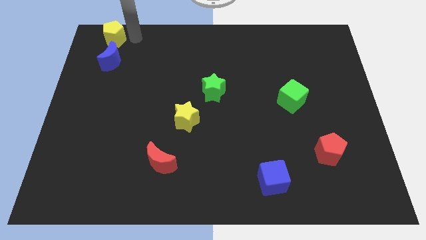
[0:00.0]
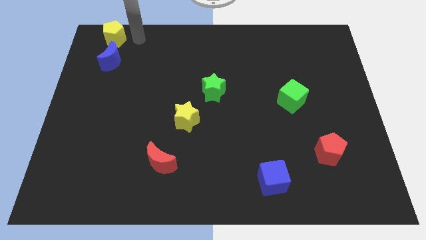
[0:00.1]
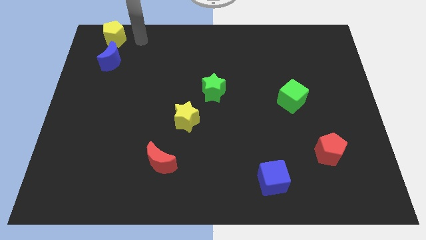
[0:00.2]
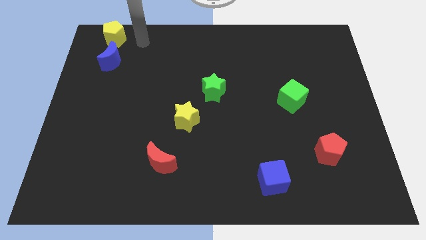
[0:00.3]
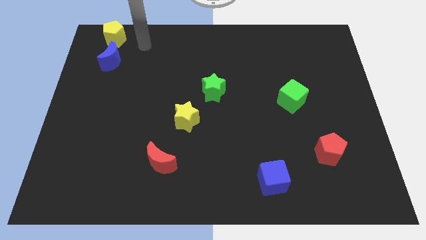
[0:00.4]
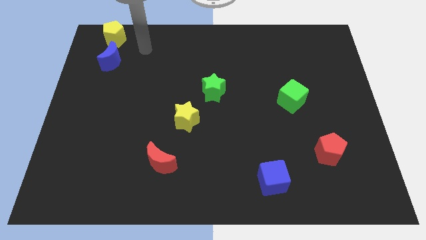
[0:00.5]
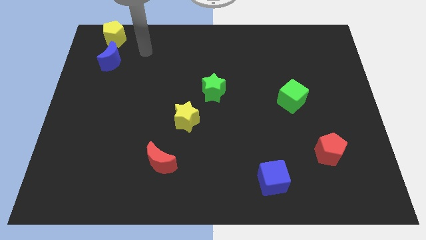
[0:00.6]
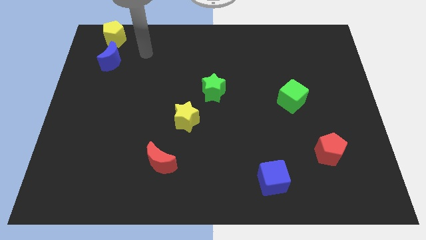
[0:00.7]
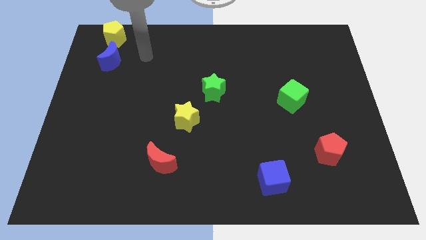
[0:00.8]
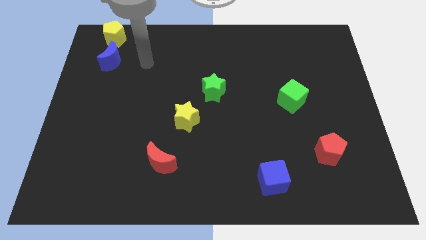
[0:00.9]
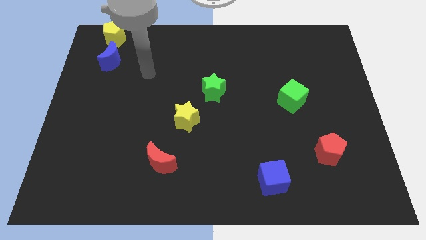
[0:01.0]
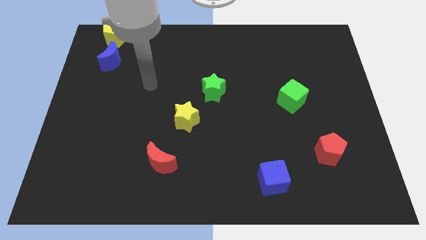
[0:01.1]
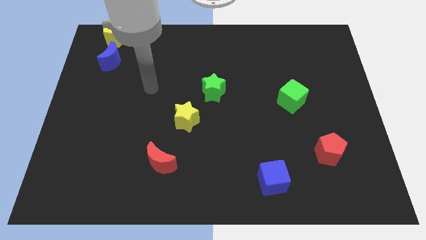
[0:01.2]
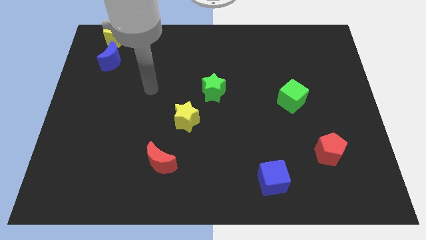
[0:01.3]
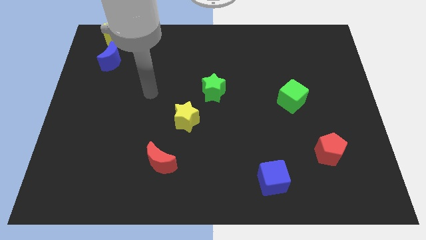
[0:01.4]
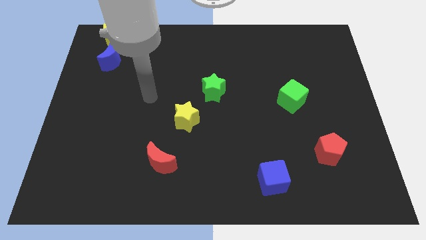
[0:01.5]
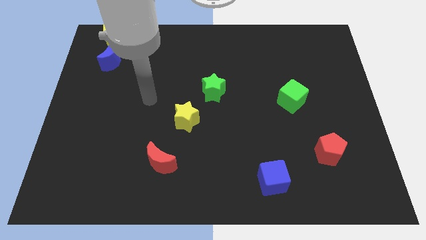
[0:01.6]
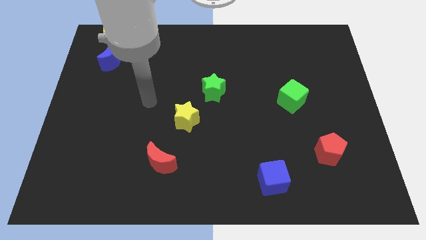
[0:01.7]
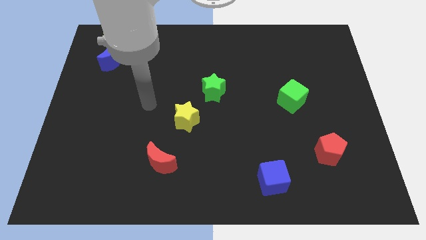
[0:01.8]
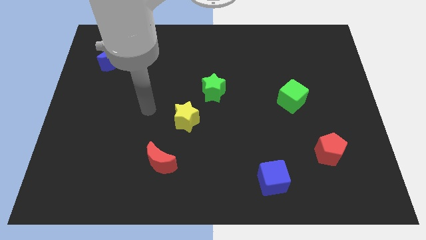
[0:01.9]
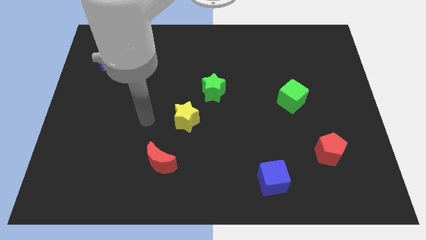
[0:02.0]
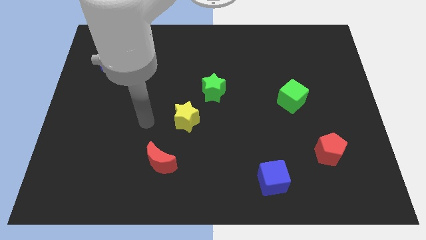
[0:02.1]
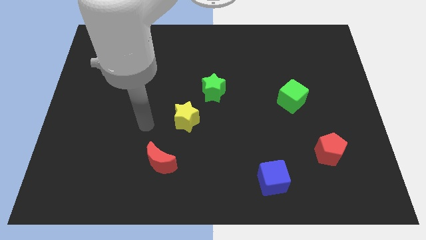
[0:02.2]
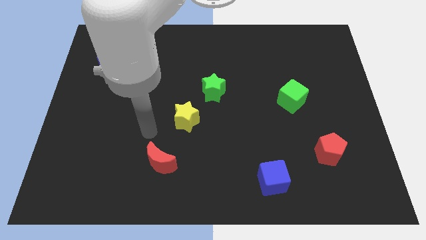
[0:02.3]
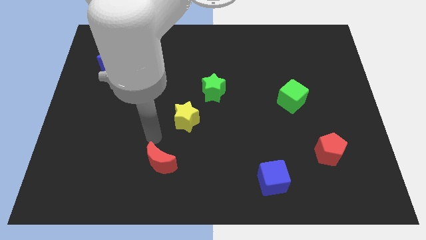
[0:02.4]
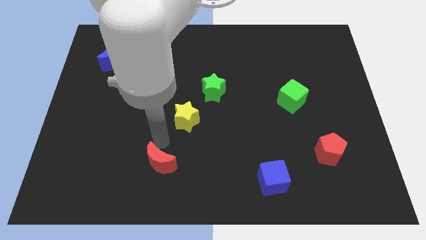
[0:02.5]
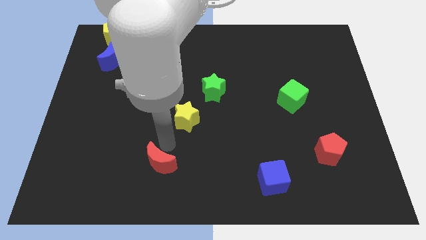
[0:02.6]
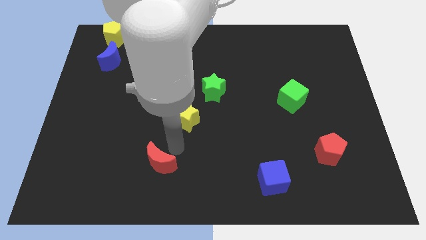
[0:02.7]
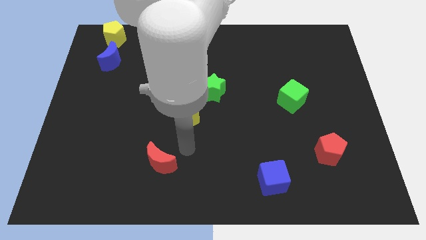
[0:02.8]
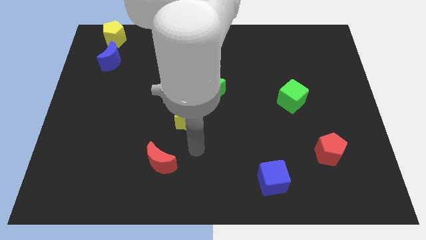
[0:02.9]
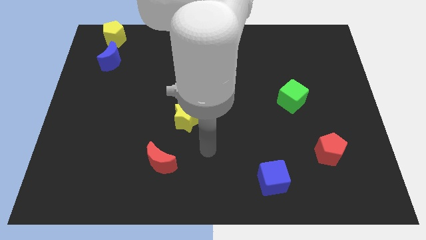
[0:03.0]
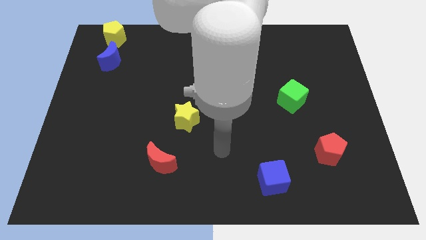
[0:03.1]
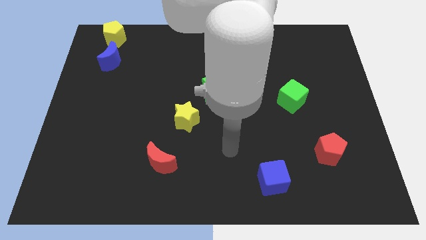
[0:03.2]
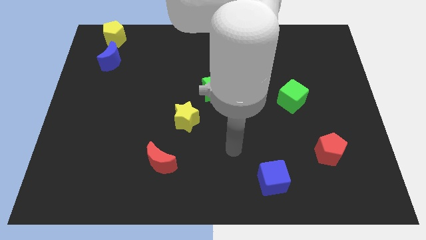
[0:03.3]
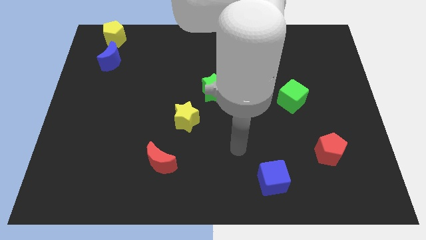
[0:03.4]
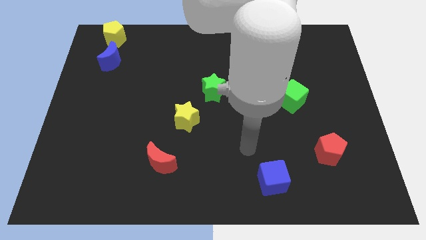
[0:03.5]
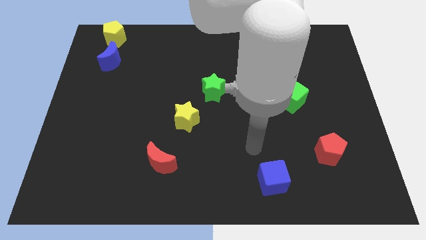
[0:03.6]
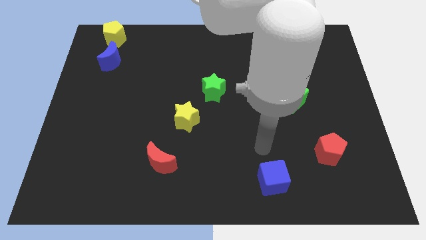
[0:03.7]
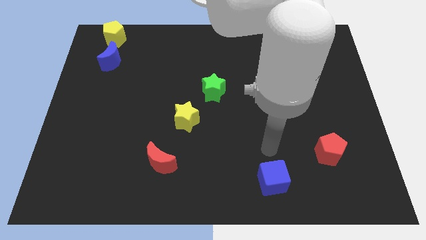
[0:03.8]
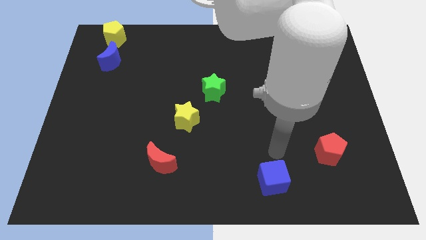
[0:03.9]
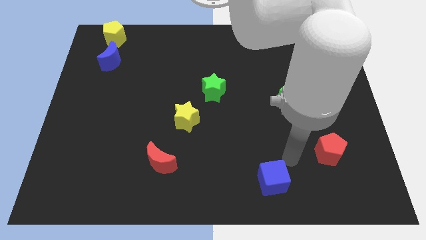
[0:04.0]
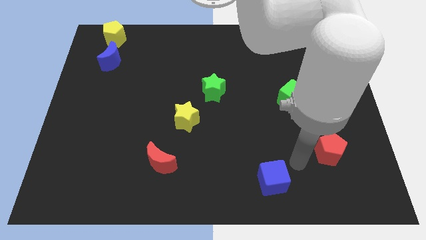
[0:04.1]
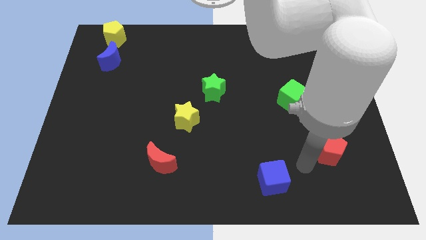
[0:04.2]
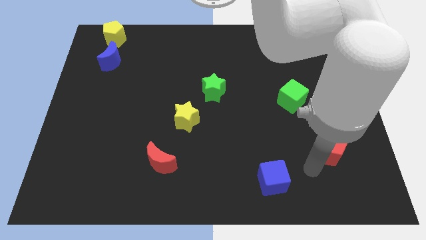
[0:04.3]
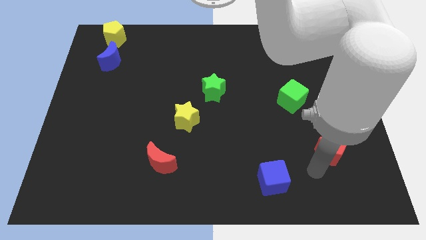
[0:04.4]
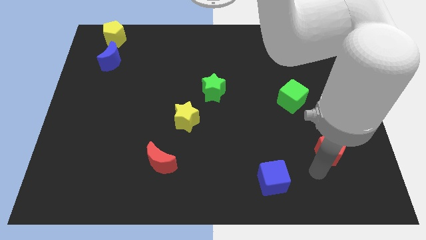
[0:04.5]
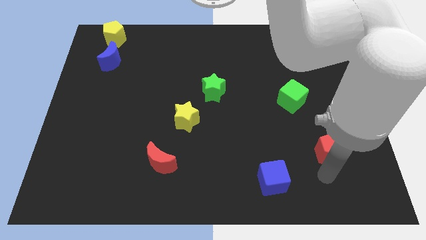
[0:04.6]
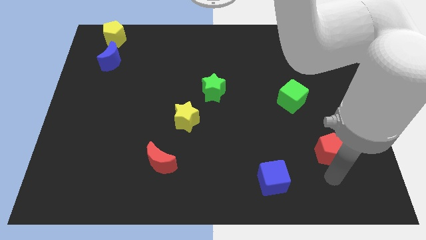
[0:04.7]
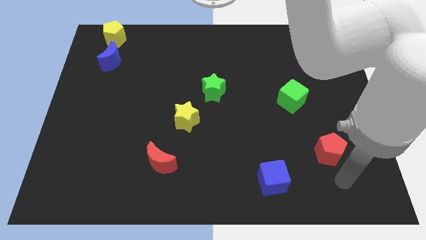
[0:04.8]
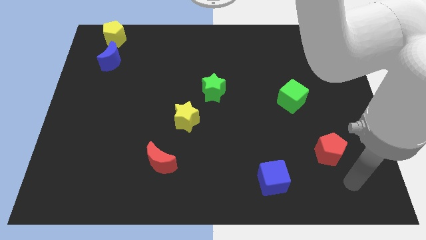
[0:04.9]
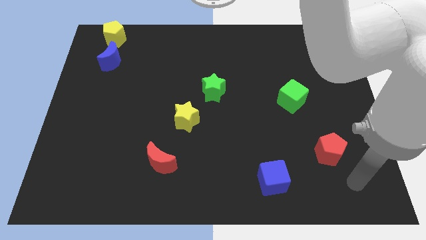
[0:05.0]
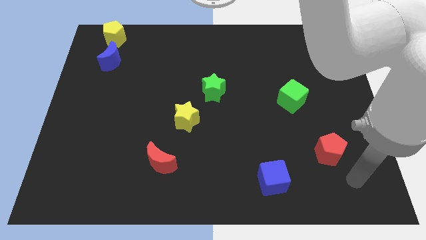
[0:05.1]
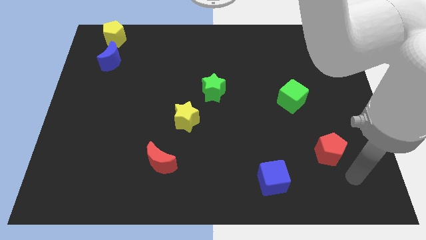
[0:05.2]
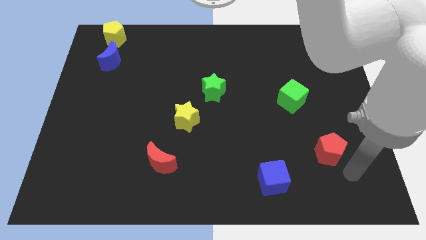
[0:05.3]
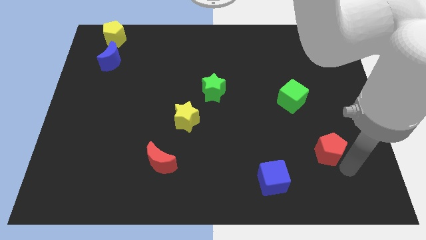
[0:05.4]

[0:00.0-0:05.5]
move your arm towards the bottom right to the red pentagon

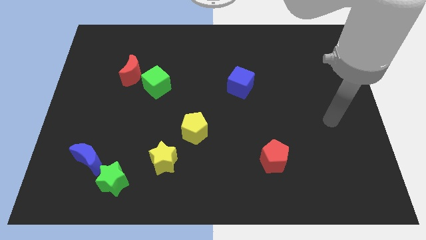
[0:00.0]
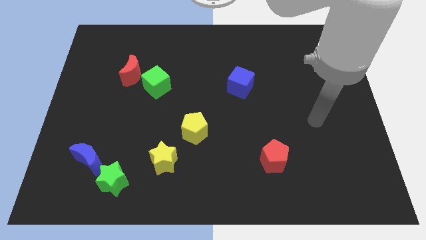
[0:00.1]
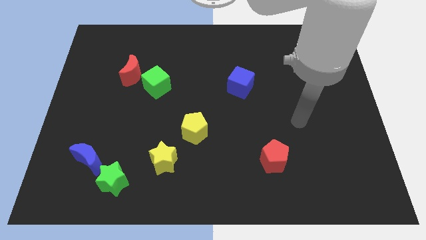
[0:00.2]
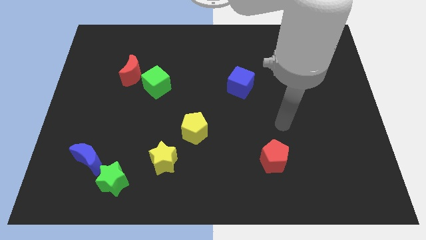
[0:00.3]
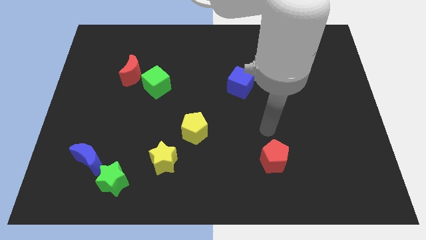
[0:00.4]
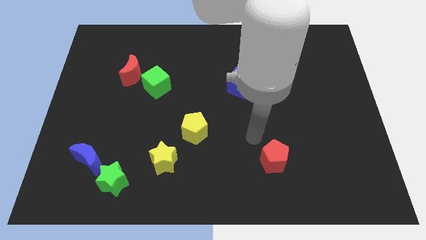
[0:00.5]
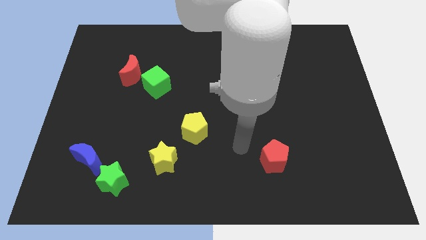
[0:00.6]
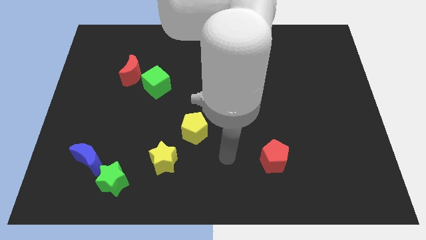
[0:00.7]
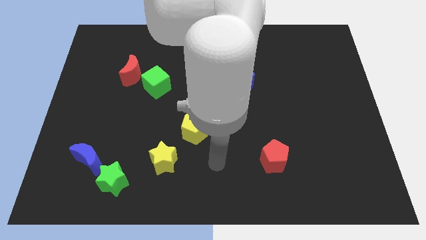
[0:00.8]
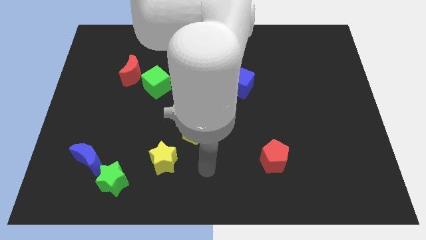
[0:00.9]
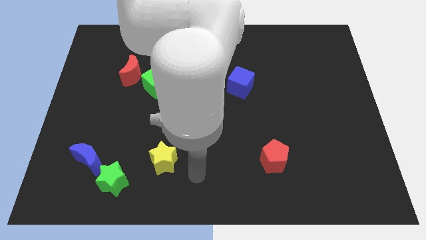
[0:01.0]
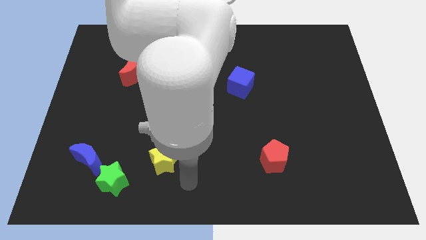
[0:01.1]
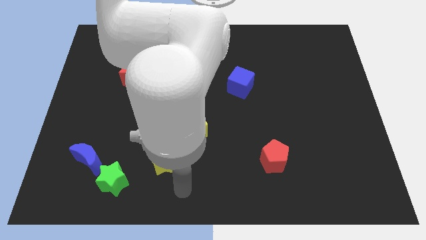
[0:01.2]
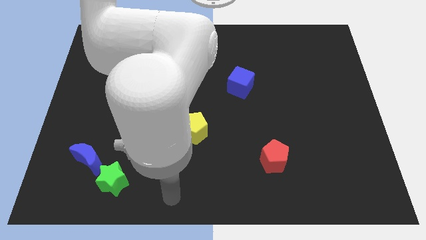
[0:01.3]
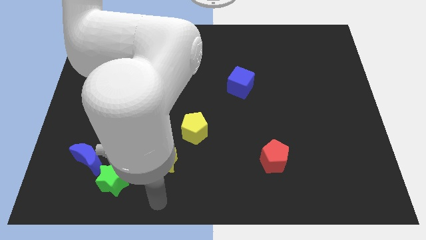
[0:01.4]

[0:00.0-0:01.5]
move your hand to the bottom side of the yellow star

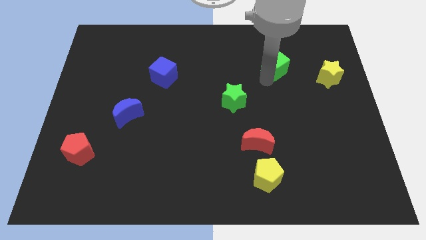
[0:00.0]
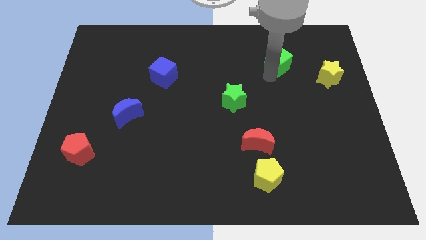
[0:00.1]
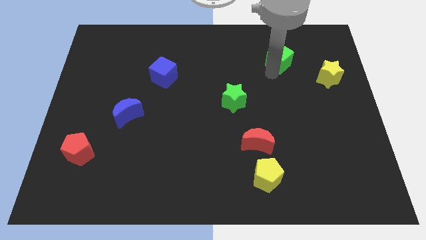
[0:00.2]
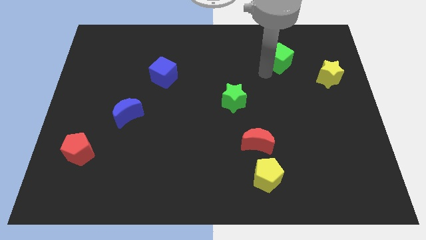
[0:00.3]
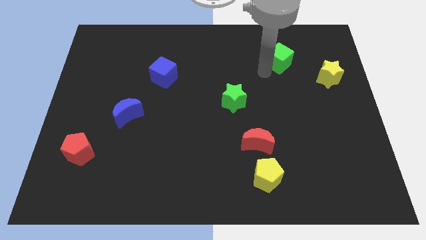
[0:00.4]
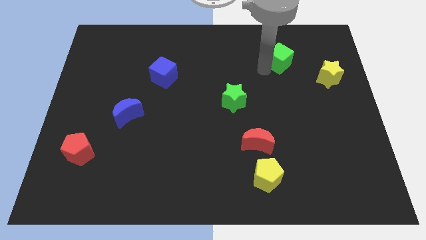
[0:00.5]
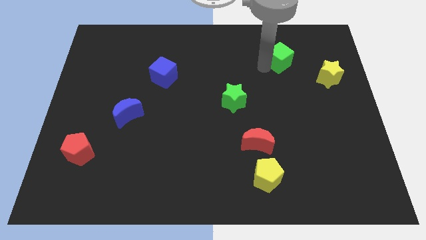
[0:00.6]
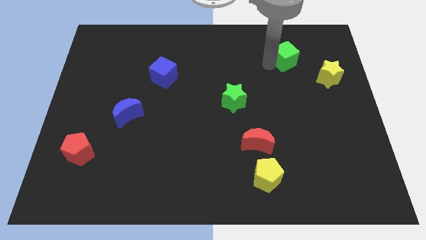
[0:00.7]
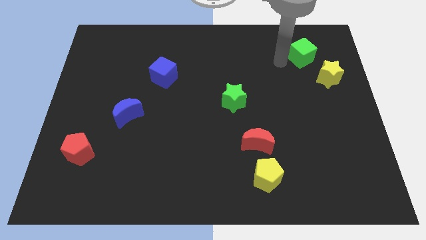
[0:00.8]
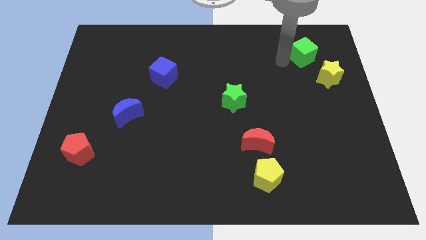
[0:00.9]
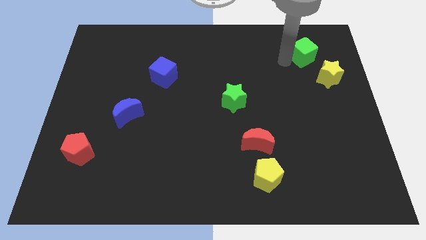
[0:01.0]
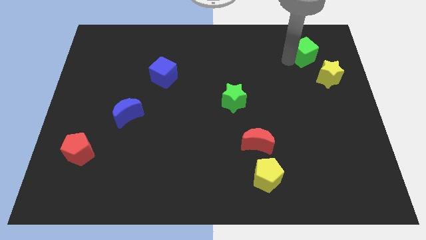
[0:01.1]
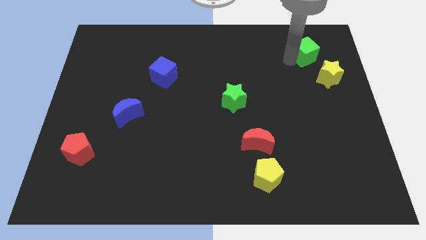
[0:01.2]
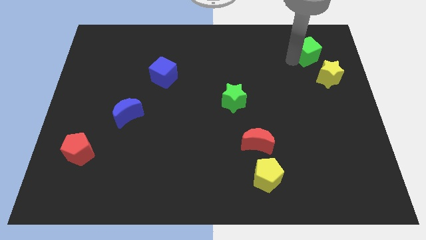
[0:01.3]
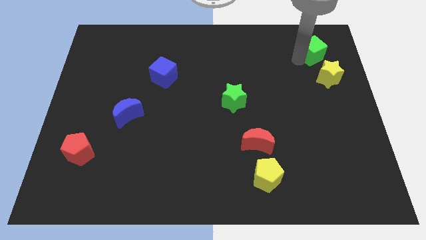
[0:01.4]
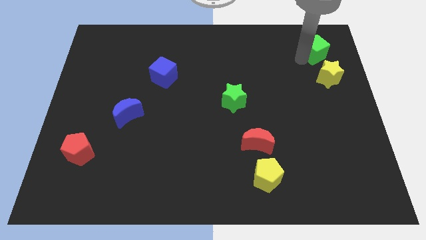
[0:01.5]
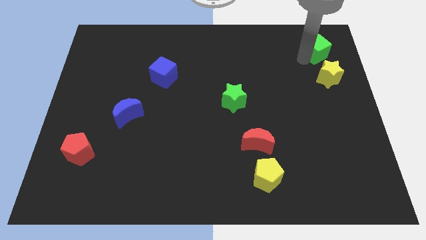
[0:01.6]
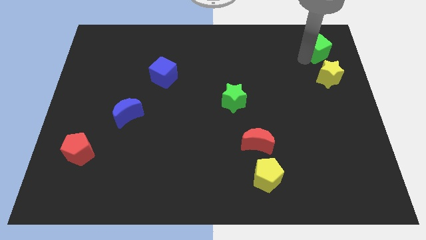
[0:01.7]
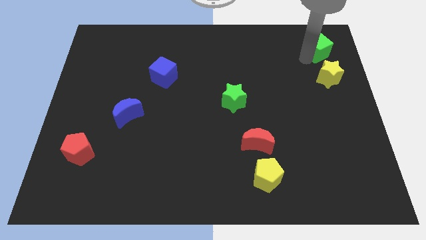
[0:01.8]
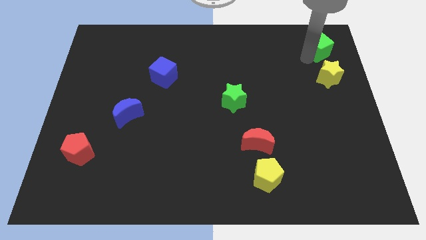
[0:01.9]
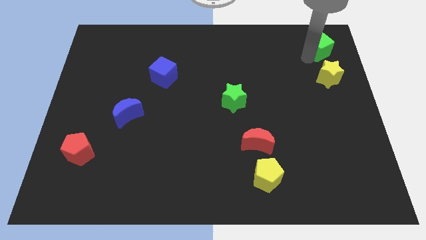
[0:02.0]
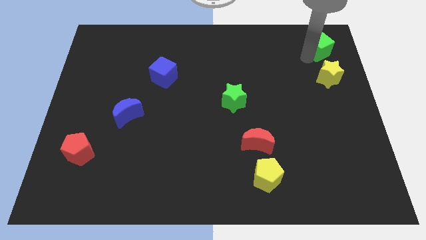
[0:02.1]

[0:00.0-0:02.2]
place the green cube to the top of the yellow star
